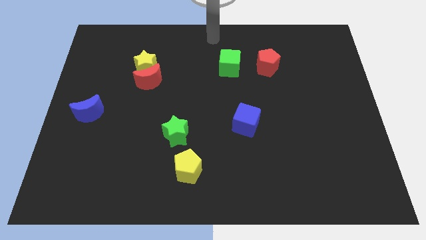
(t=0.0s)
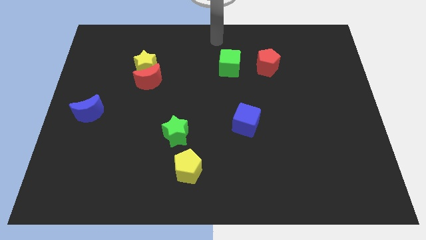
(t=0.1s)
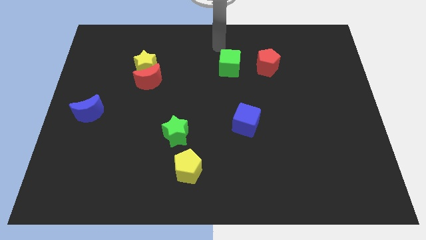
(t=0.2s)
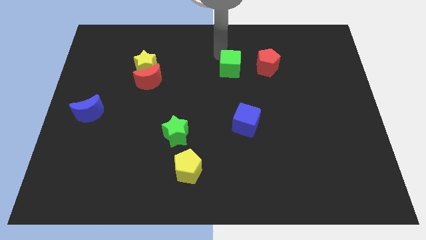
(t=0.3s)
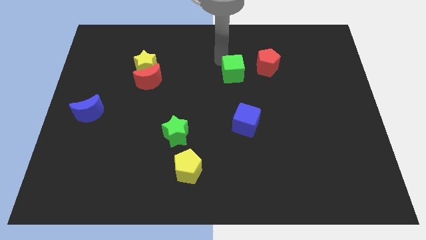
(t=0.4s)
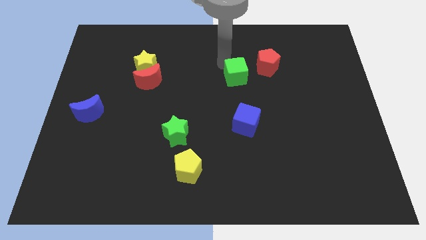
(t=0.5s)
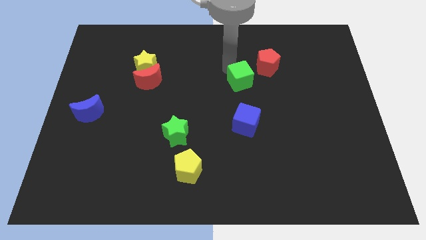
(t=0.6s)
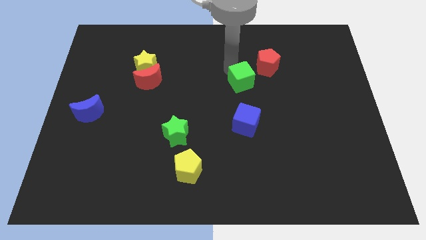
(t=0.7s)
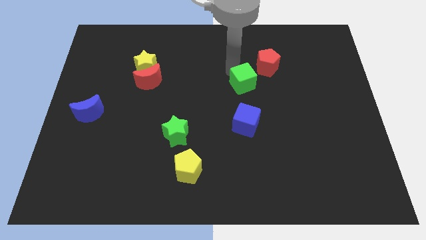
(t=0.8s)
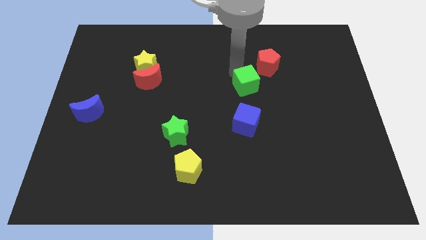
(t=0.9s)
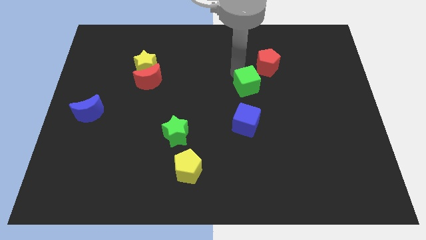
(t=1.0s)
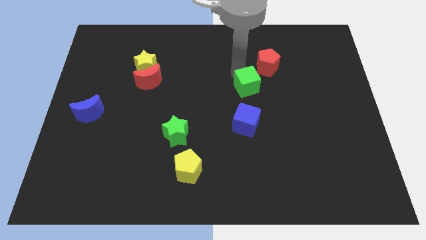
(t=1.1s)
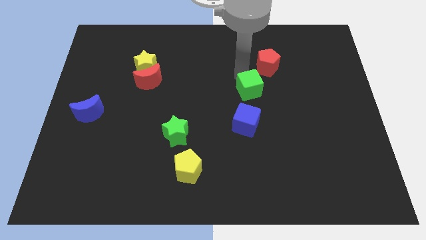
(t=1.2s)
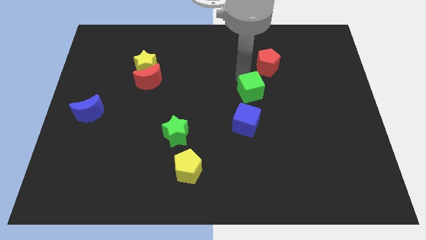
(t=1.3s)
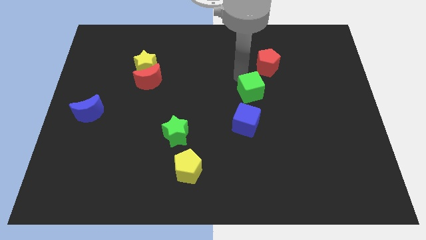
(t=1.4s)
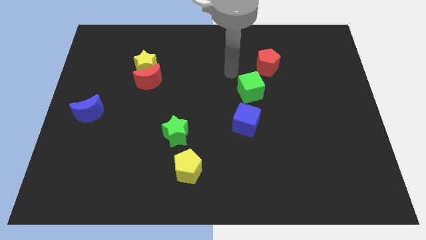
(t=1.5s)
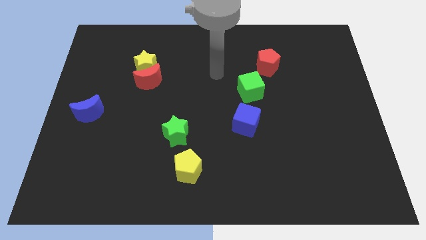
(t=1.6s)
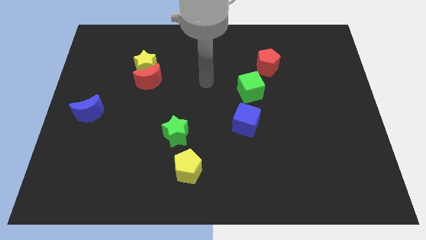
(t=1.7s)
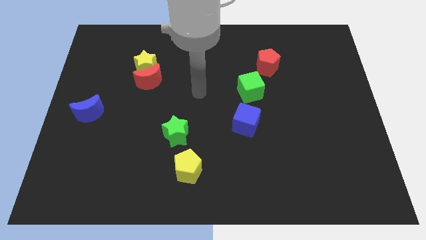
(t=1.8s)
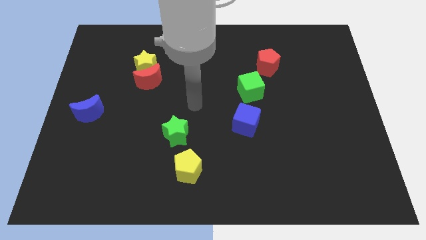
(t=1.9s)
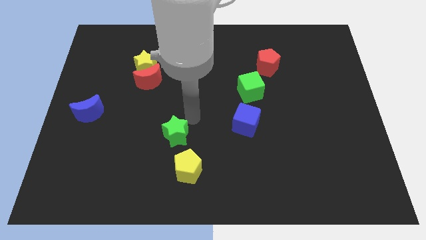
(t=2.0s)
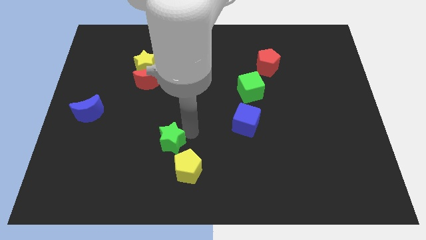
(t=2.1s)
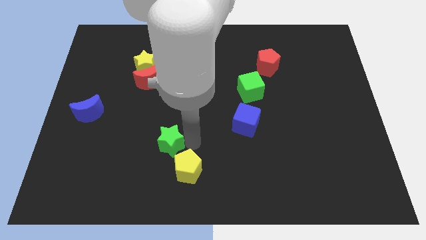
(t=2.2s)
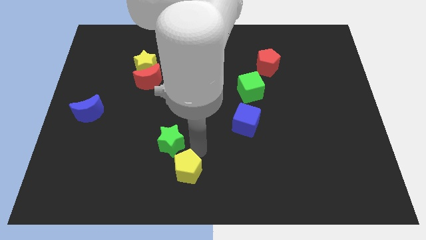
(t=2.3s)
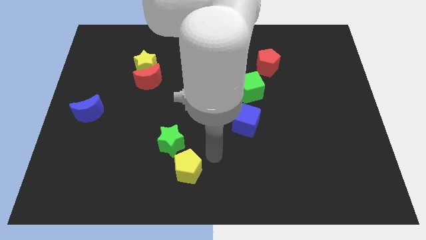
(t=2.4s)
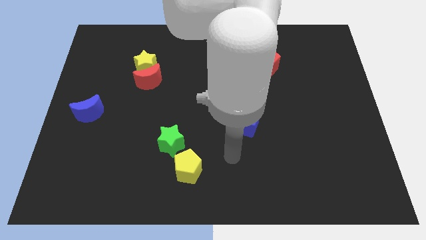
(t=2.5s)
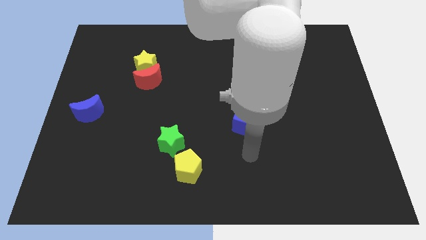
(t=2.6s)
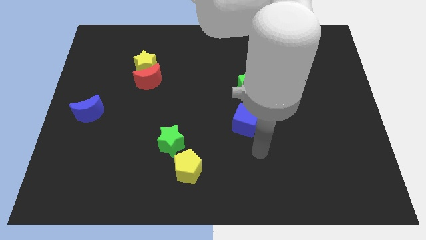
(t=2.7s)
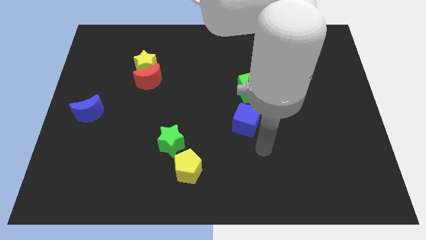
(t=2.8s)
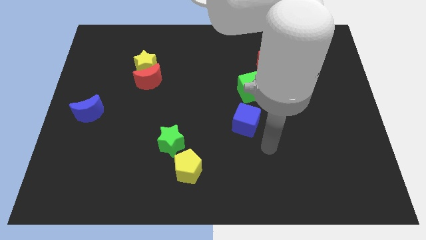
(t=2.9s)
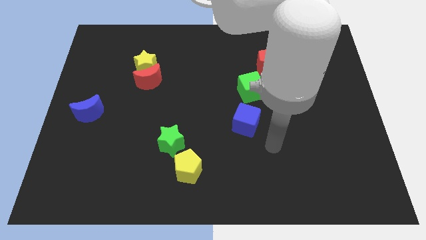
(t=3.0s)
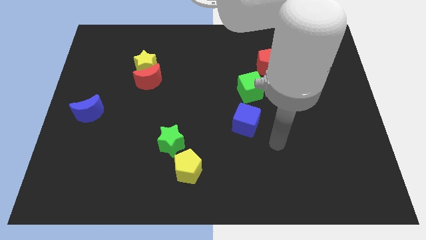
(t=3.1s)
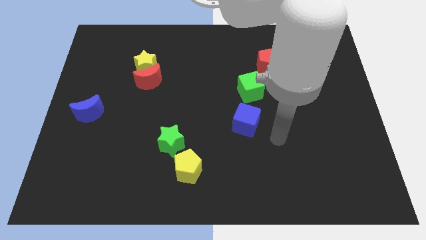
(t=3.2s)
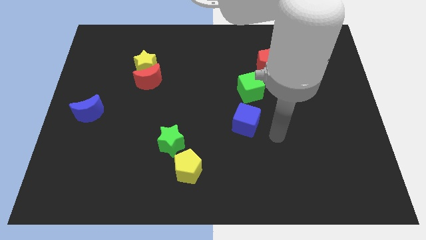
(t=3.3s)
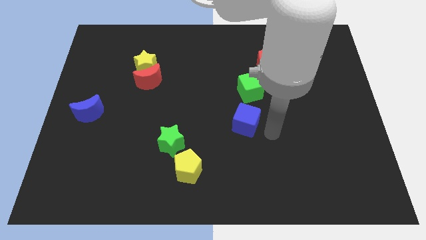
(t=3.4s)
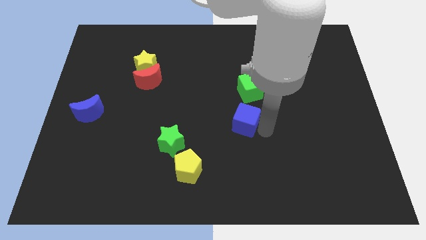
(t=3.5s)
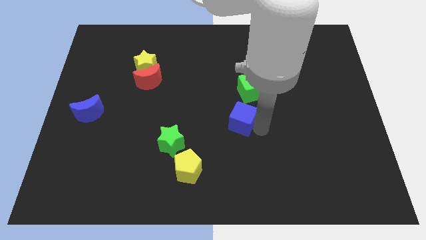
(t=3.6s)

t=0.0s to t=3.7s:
place the green cube in between the blue cube and the red pentagon to form a diagnoal line

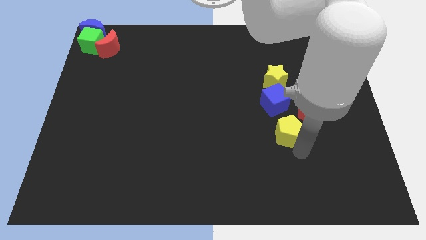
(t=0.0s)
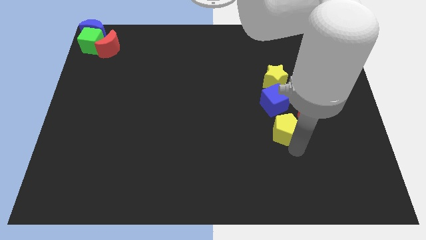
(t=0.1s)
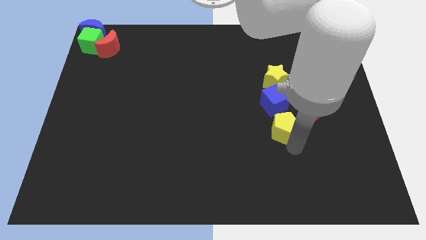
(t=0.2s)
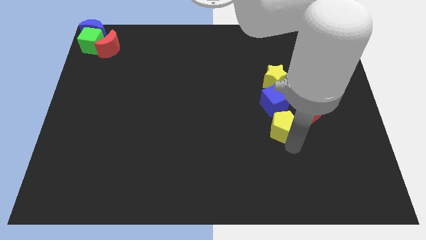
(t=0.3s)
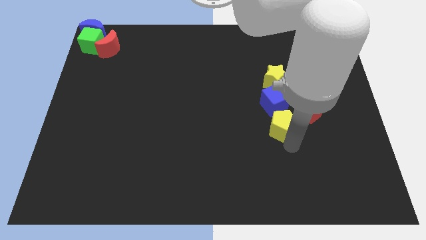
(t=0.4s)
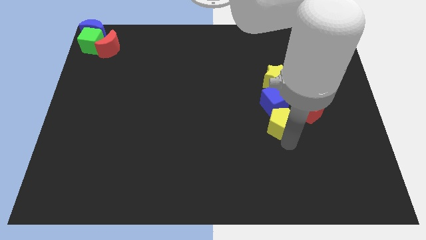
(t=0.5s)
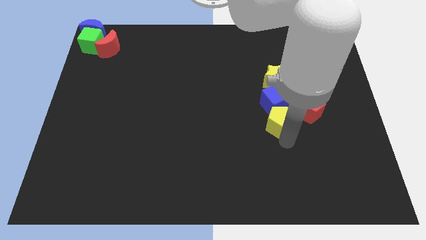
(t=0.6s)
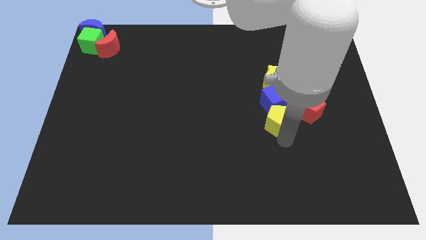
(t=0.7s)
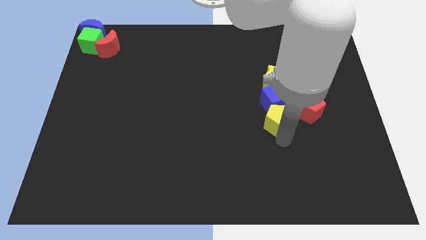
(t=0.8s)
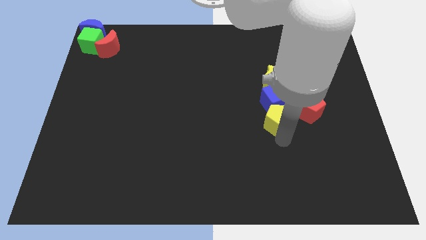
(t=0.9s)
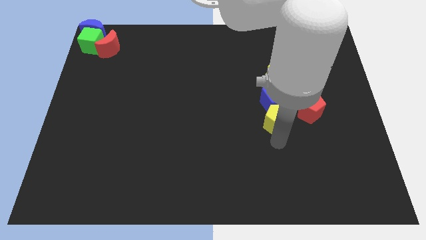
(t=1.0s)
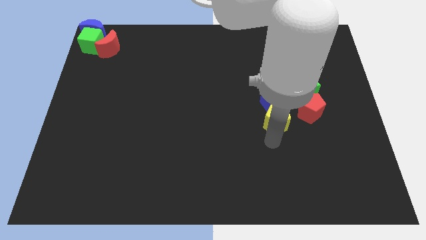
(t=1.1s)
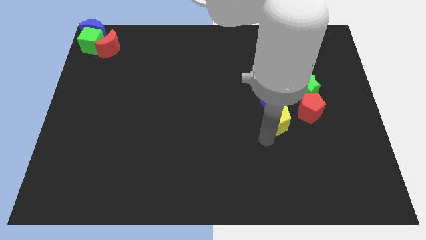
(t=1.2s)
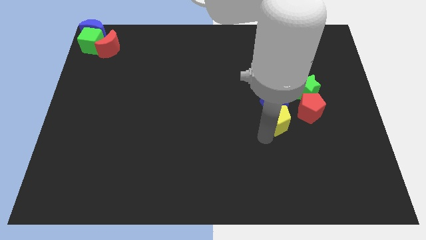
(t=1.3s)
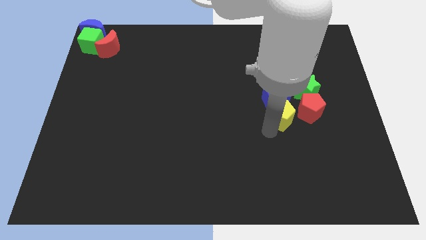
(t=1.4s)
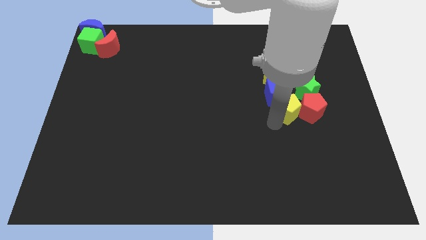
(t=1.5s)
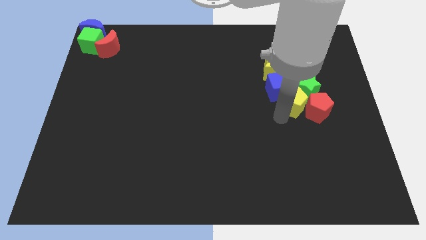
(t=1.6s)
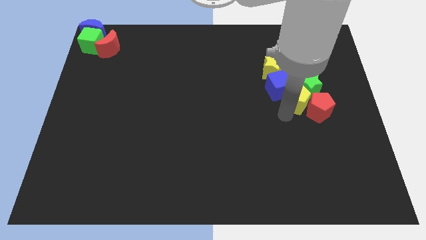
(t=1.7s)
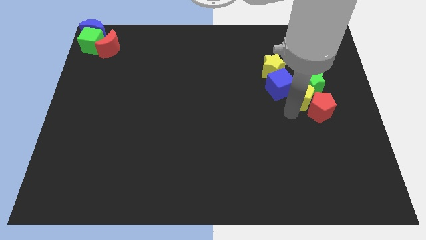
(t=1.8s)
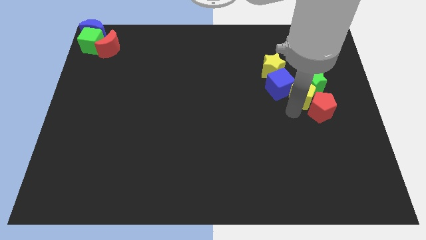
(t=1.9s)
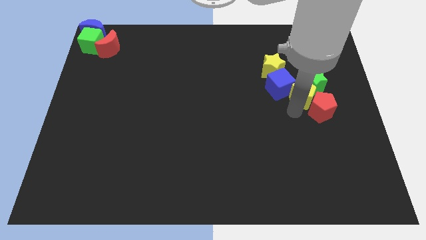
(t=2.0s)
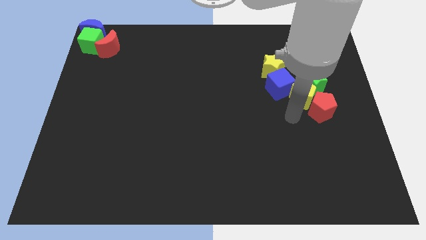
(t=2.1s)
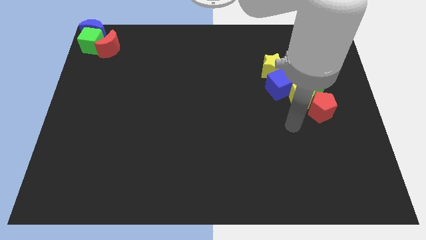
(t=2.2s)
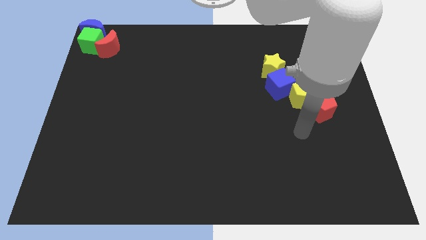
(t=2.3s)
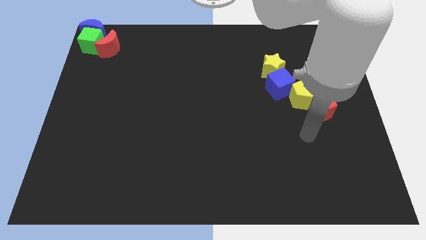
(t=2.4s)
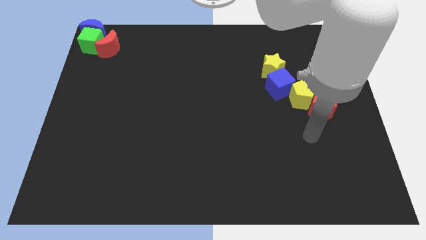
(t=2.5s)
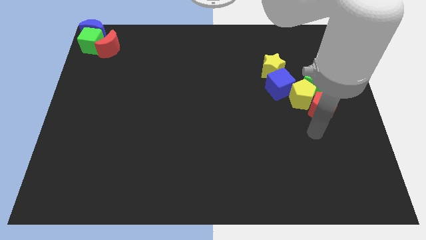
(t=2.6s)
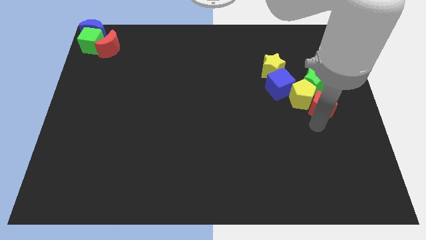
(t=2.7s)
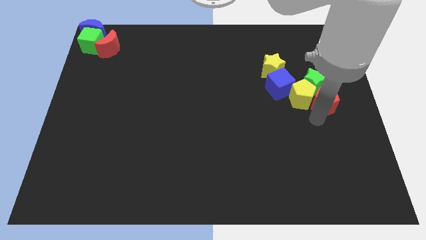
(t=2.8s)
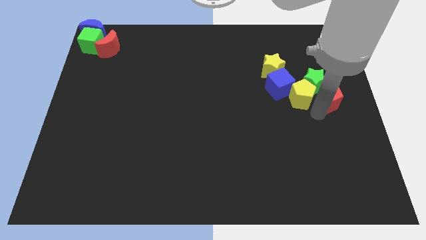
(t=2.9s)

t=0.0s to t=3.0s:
push the yellow pentagon to the left of the red pentagon

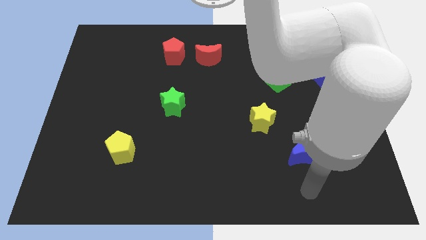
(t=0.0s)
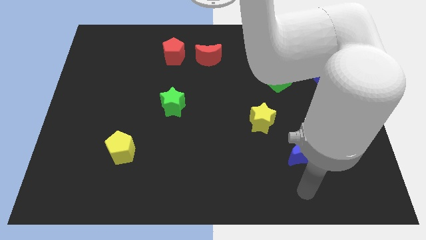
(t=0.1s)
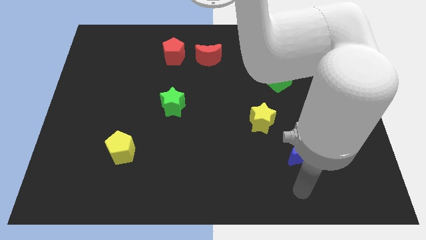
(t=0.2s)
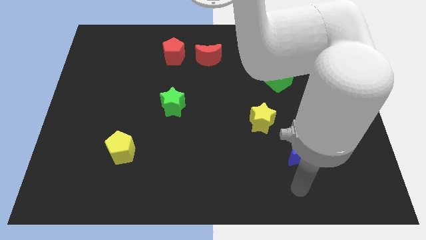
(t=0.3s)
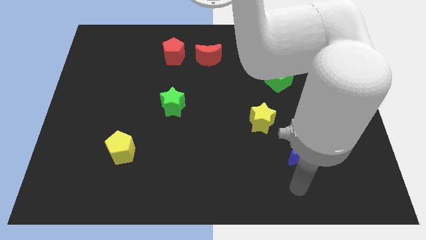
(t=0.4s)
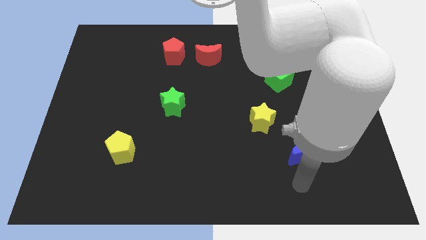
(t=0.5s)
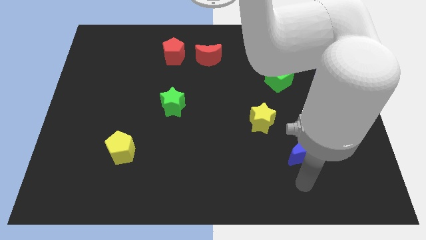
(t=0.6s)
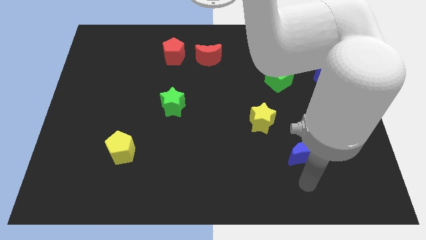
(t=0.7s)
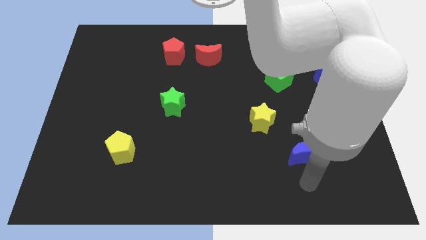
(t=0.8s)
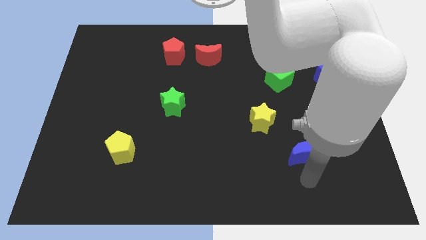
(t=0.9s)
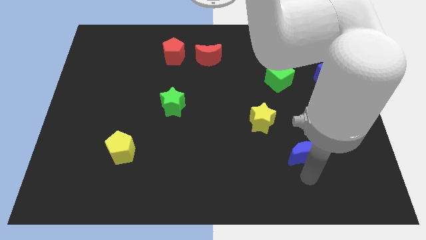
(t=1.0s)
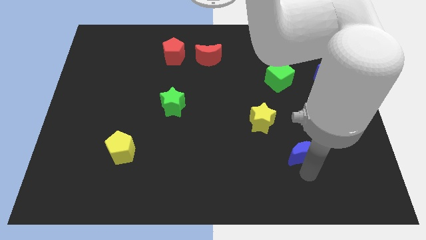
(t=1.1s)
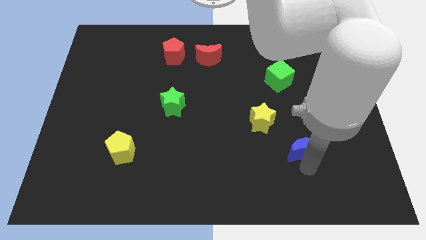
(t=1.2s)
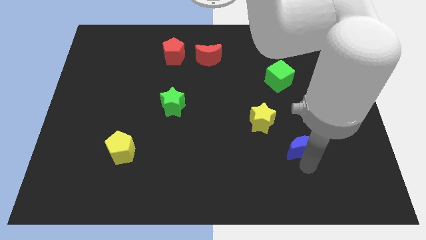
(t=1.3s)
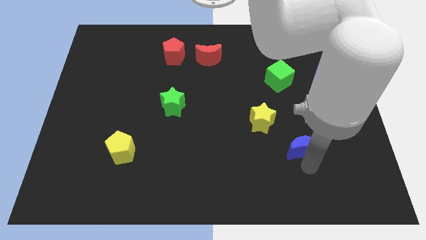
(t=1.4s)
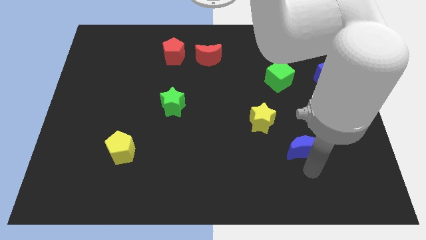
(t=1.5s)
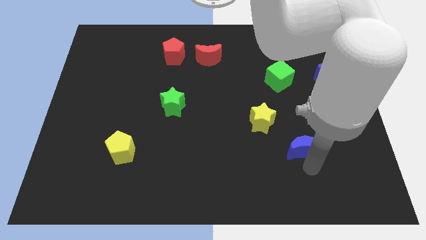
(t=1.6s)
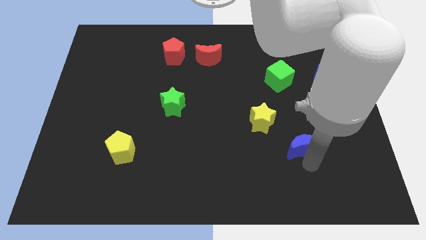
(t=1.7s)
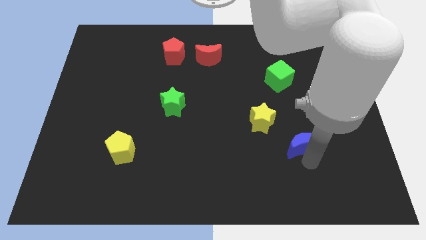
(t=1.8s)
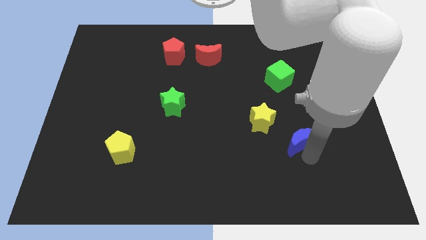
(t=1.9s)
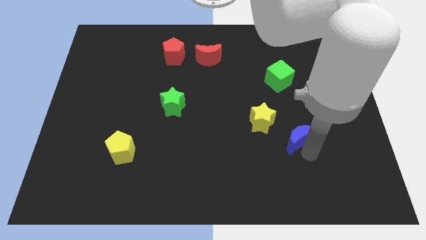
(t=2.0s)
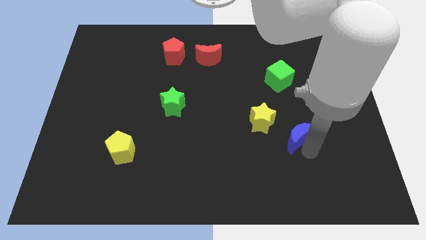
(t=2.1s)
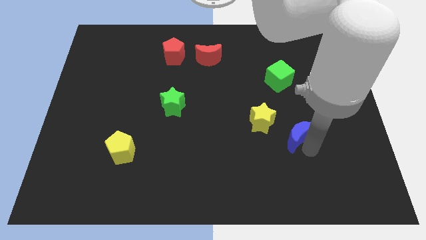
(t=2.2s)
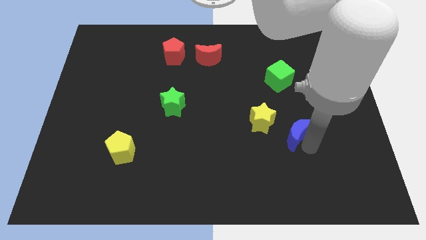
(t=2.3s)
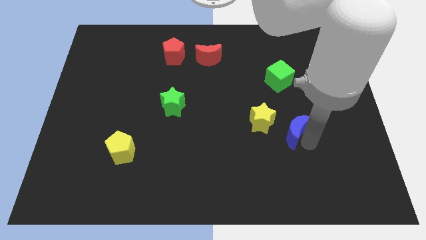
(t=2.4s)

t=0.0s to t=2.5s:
push the blue moon upward
